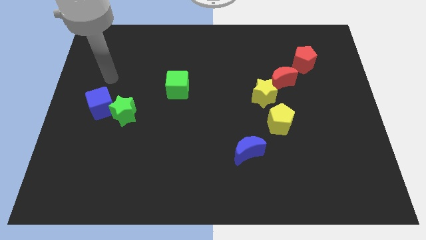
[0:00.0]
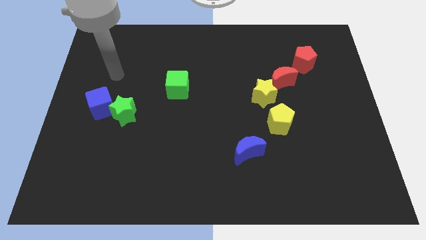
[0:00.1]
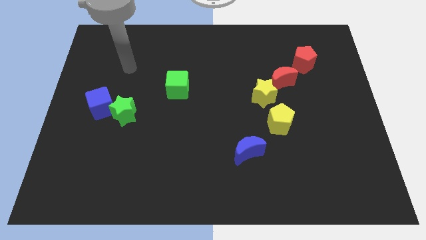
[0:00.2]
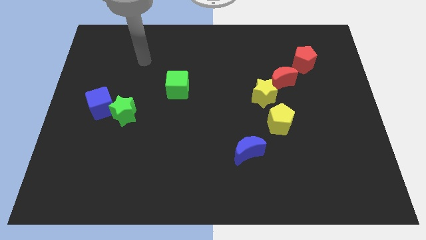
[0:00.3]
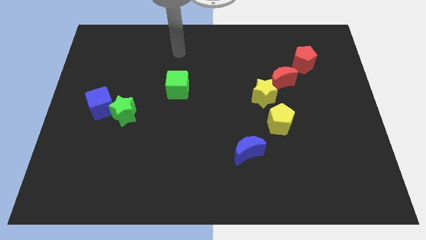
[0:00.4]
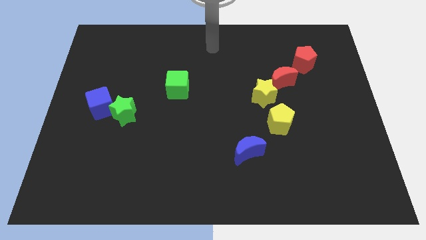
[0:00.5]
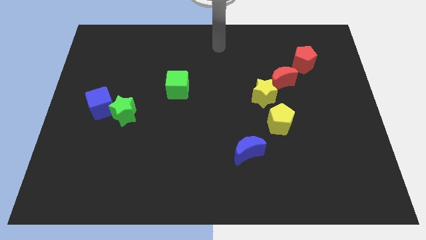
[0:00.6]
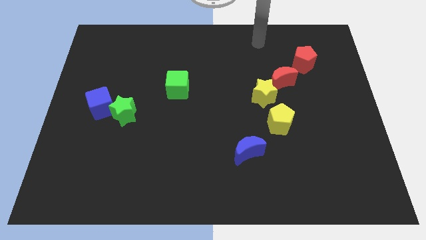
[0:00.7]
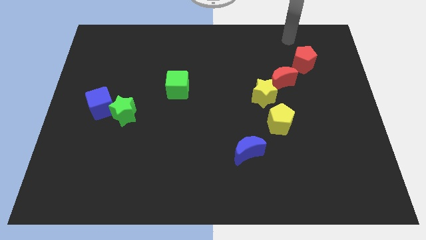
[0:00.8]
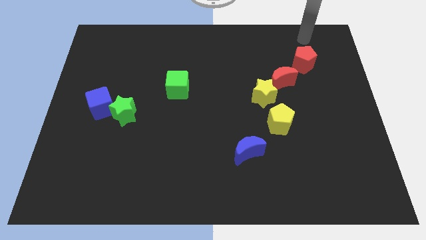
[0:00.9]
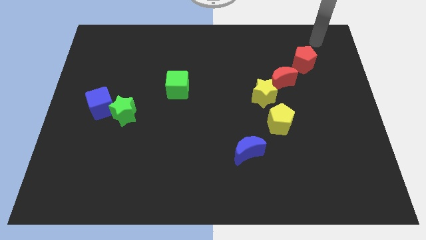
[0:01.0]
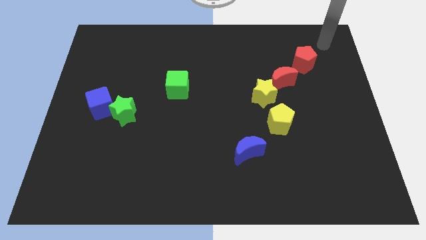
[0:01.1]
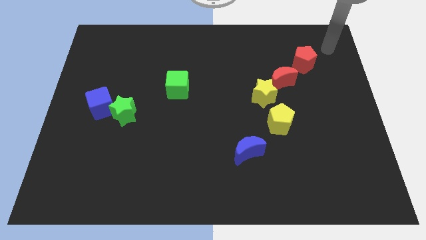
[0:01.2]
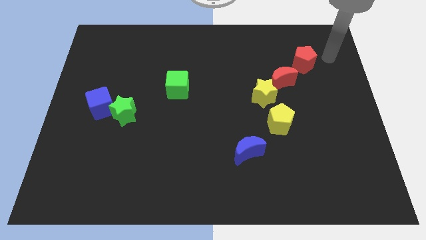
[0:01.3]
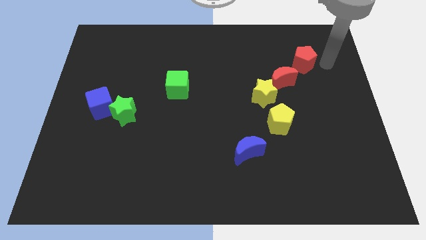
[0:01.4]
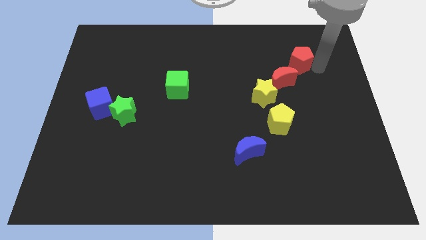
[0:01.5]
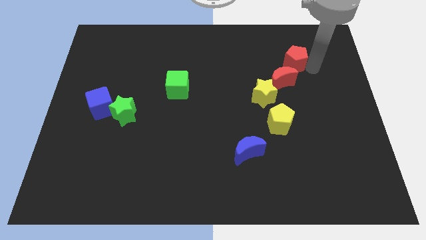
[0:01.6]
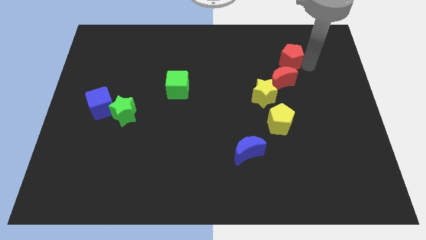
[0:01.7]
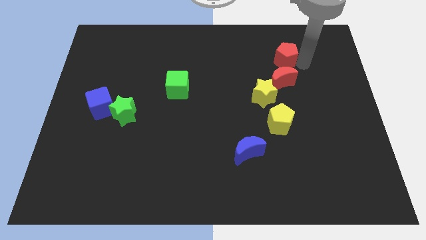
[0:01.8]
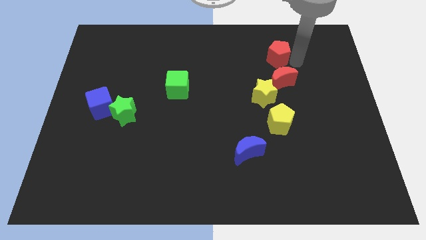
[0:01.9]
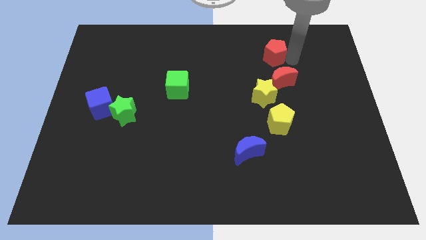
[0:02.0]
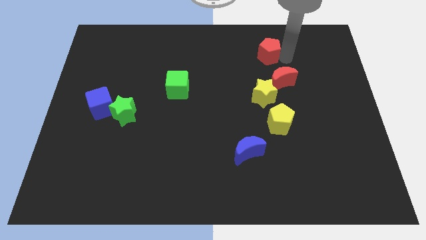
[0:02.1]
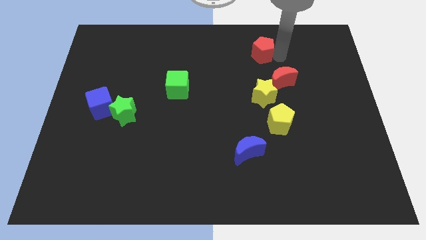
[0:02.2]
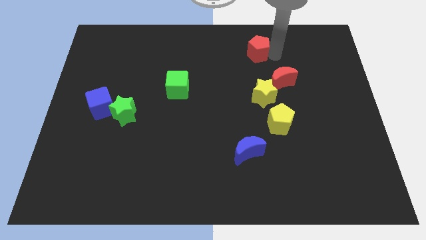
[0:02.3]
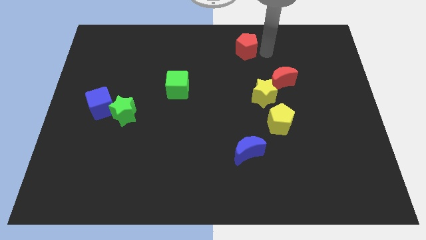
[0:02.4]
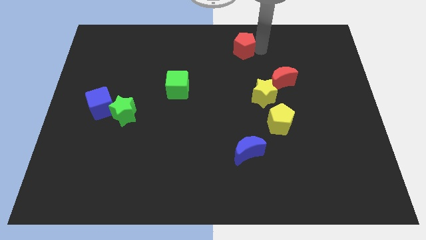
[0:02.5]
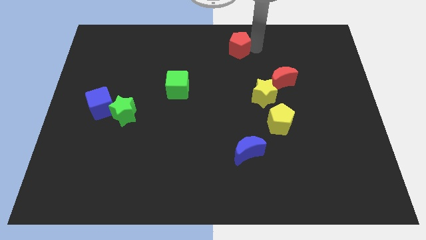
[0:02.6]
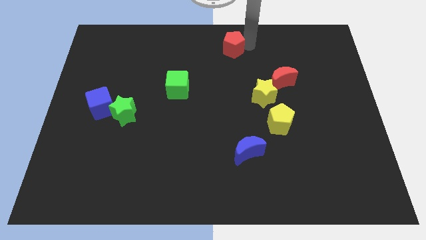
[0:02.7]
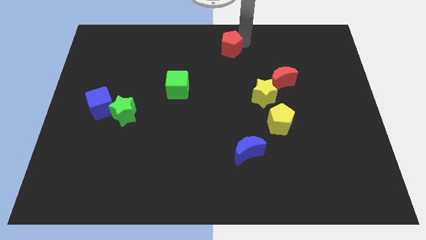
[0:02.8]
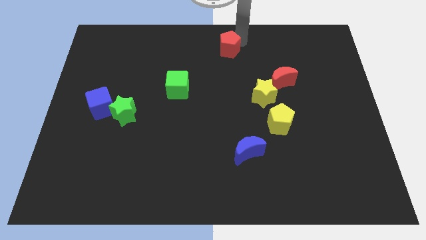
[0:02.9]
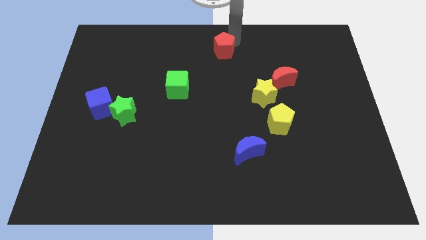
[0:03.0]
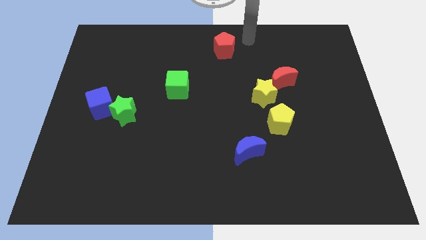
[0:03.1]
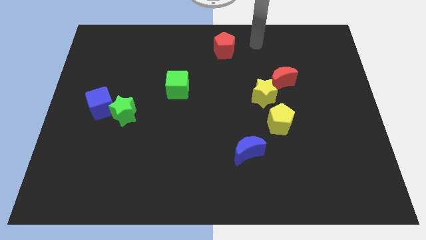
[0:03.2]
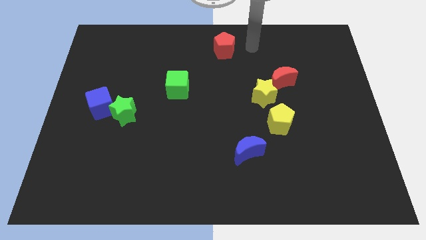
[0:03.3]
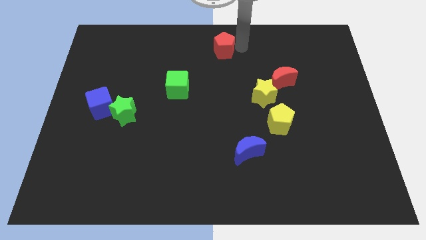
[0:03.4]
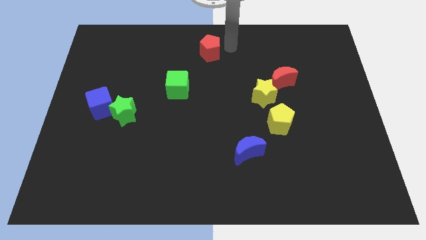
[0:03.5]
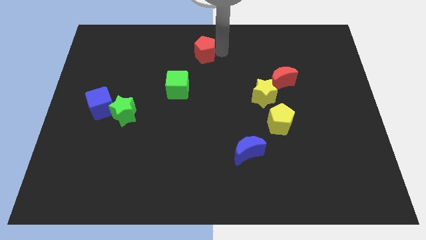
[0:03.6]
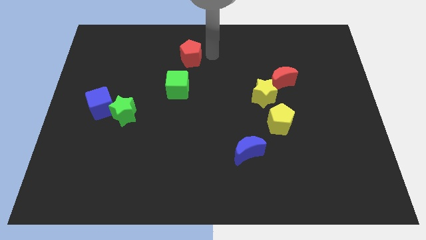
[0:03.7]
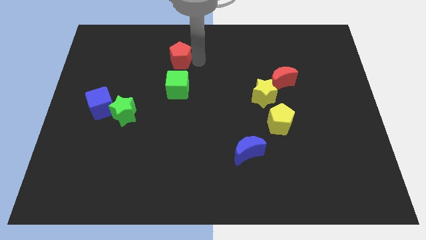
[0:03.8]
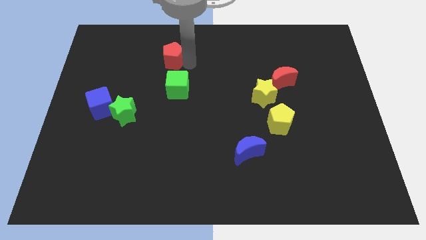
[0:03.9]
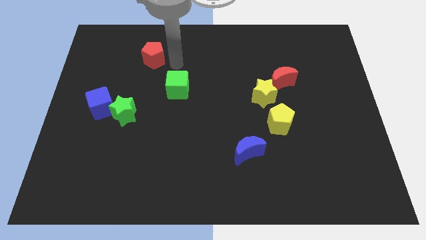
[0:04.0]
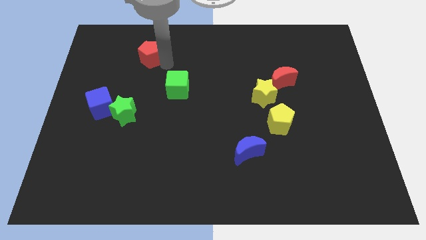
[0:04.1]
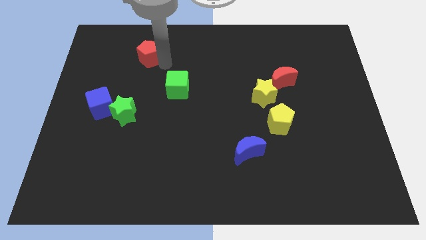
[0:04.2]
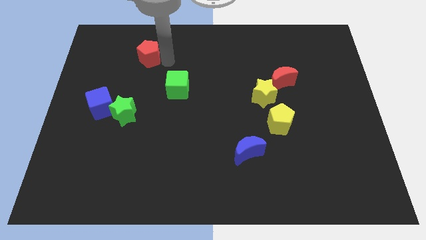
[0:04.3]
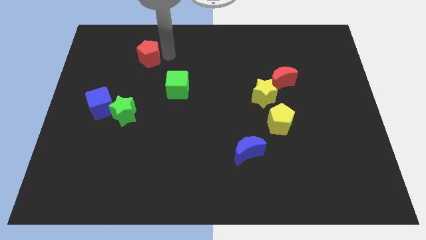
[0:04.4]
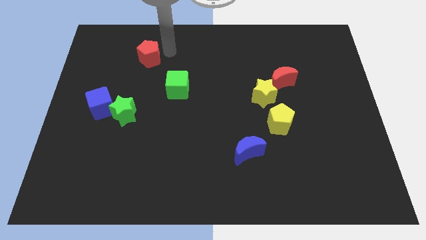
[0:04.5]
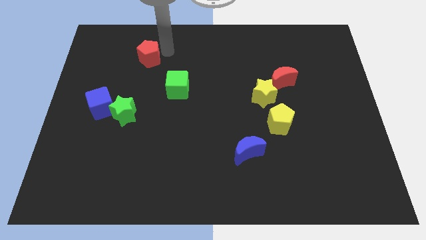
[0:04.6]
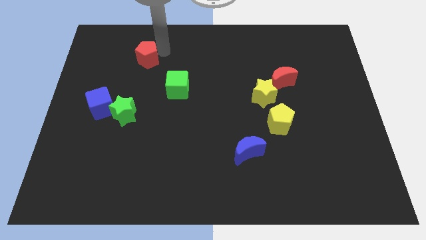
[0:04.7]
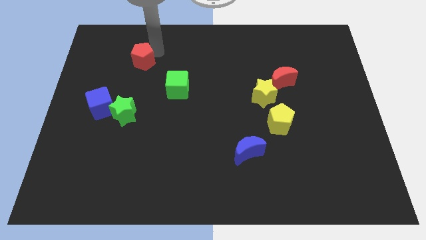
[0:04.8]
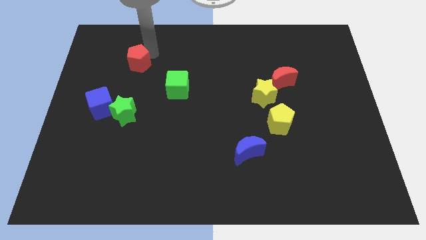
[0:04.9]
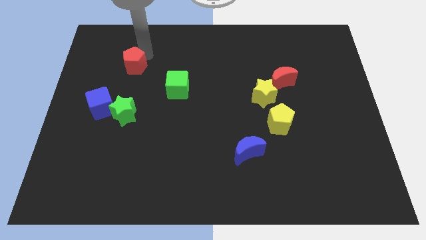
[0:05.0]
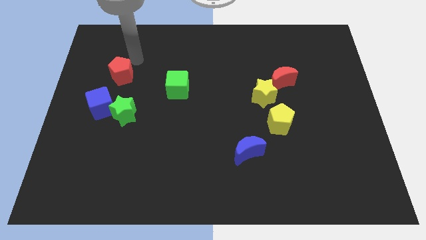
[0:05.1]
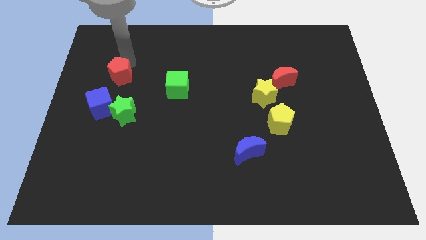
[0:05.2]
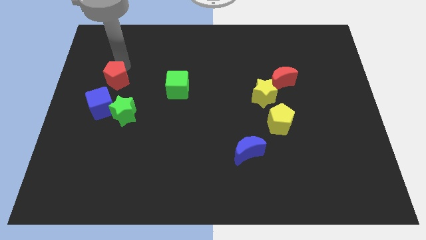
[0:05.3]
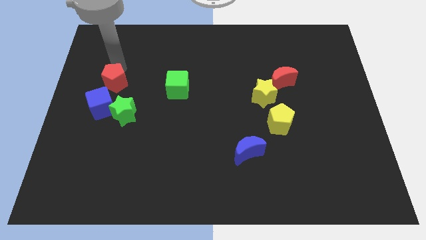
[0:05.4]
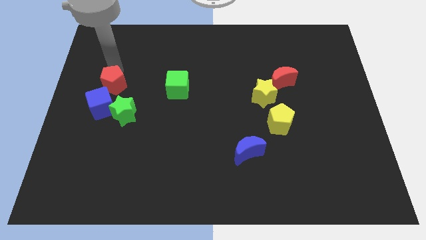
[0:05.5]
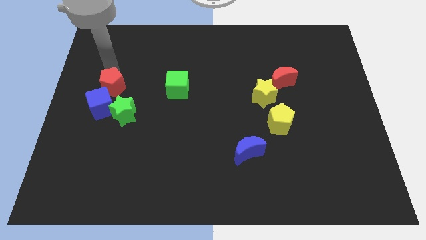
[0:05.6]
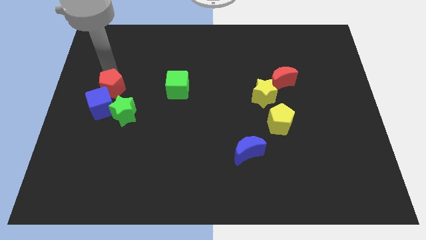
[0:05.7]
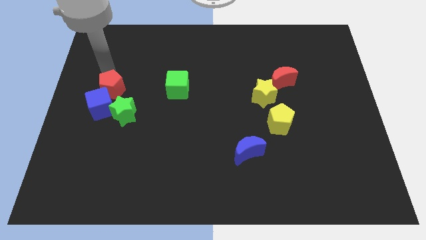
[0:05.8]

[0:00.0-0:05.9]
push the red pentagon next to the blue cube

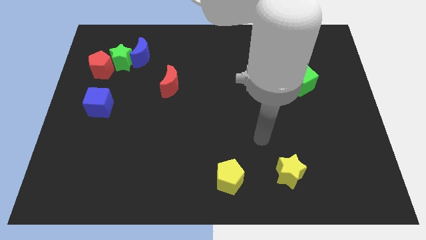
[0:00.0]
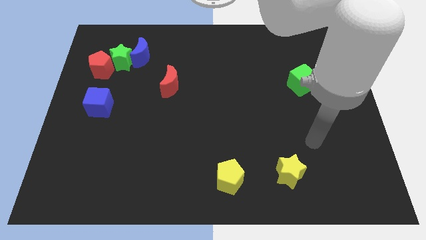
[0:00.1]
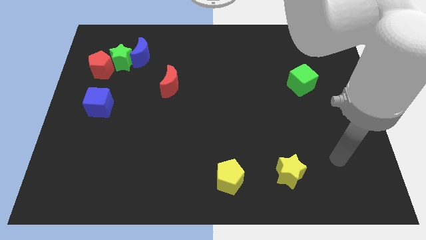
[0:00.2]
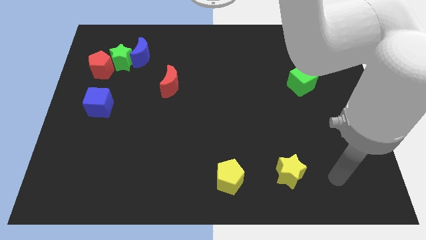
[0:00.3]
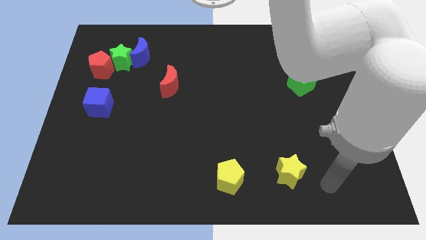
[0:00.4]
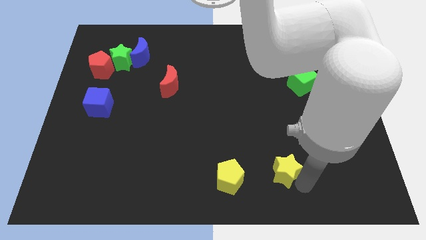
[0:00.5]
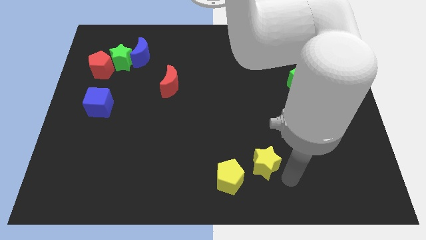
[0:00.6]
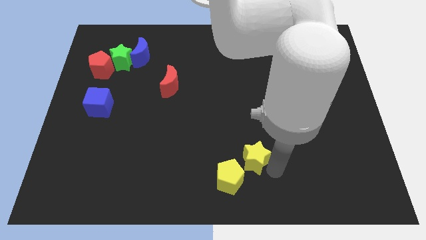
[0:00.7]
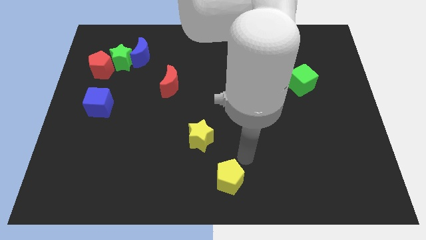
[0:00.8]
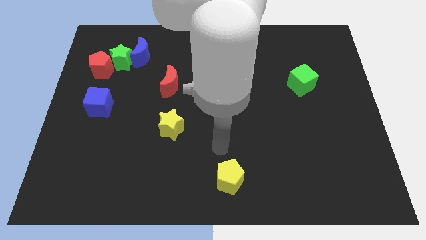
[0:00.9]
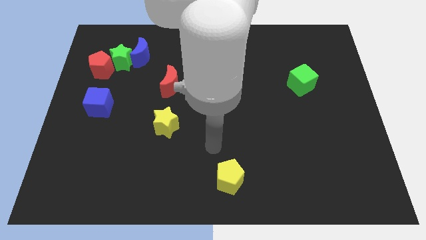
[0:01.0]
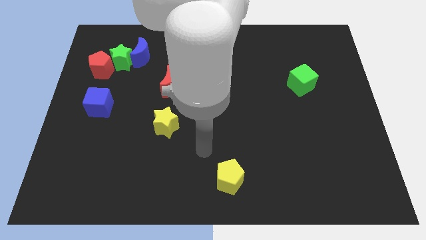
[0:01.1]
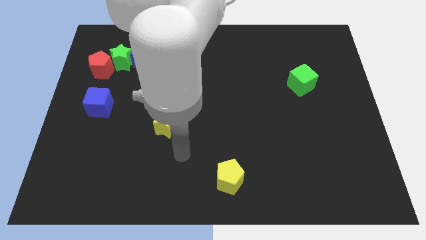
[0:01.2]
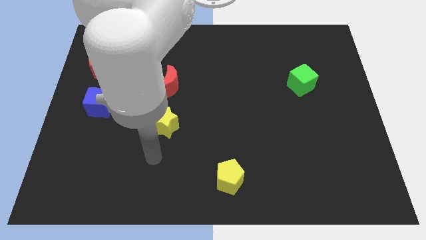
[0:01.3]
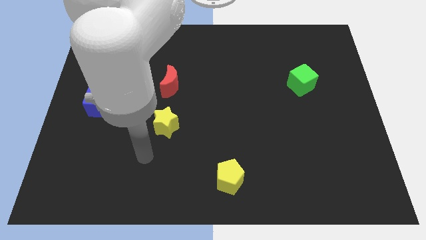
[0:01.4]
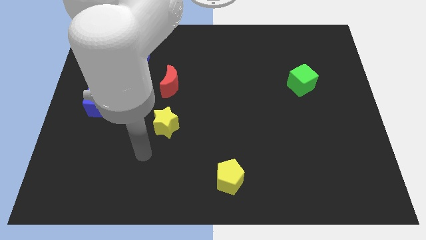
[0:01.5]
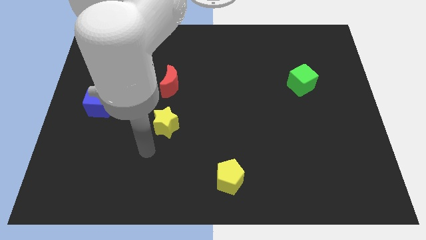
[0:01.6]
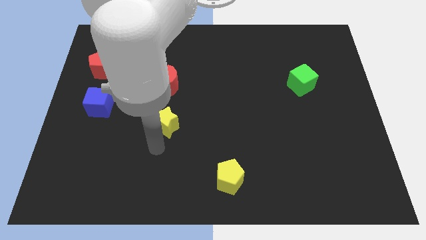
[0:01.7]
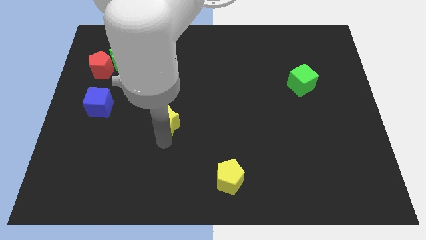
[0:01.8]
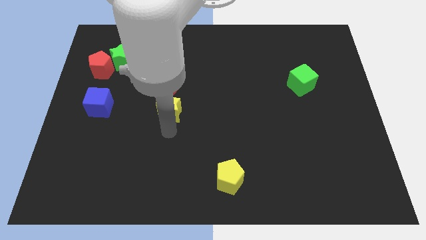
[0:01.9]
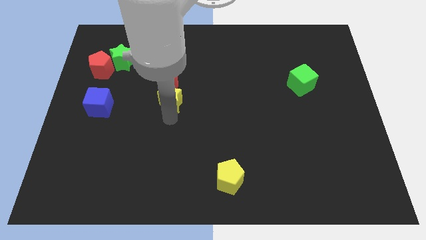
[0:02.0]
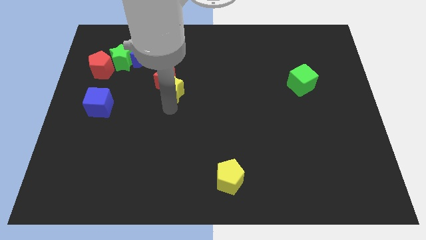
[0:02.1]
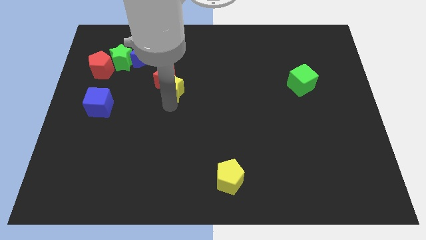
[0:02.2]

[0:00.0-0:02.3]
move the yellow star to the red moon

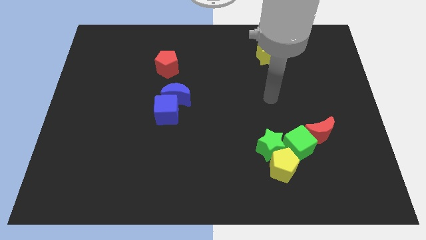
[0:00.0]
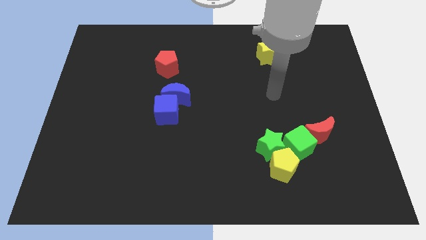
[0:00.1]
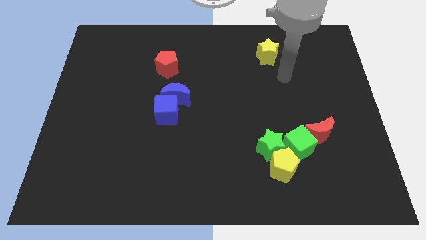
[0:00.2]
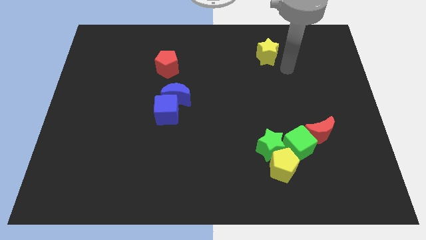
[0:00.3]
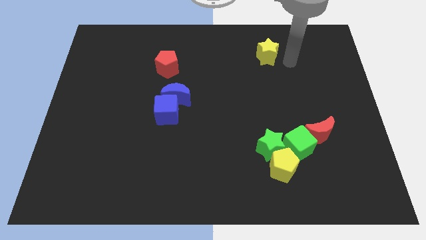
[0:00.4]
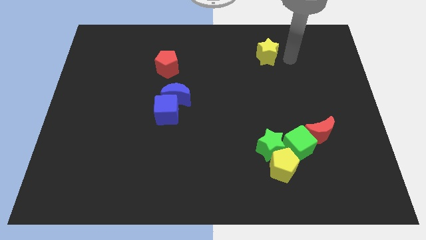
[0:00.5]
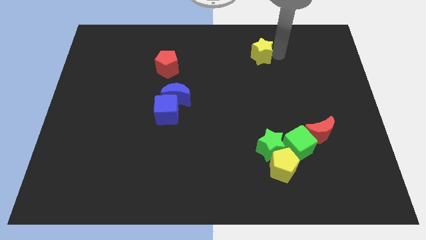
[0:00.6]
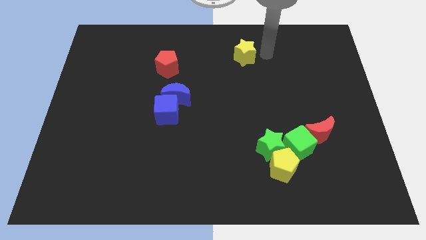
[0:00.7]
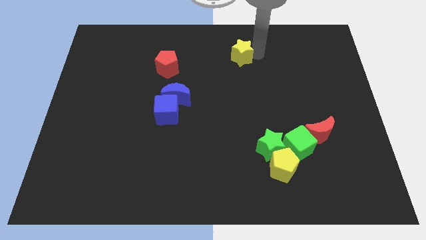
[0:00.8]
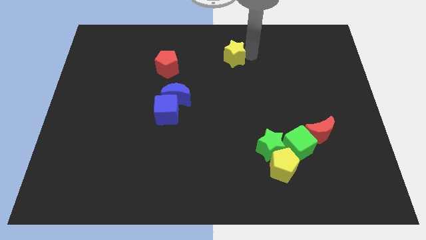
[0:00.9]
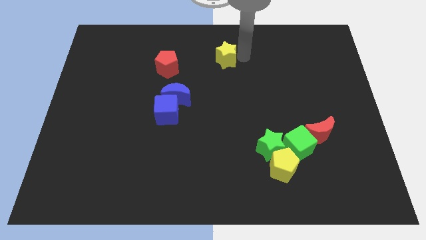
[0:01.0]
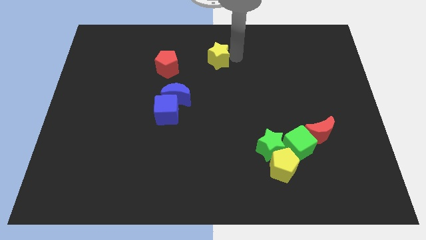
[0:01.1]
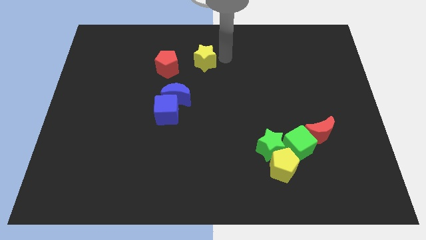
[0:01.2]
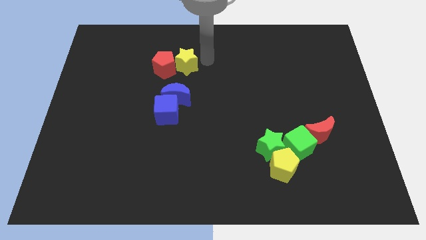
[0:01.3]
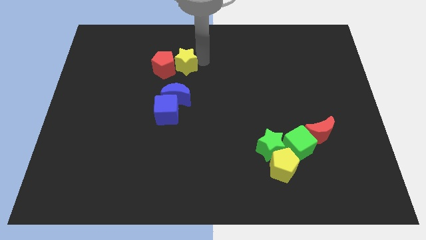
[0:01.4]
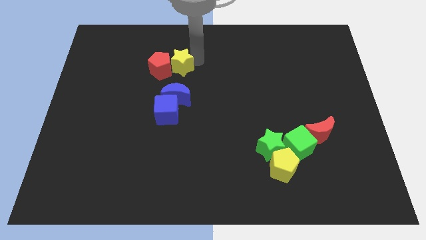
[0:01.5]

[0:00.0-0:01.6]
slide the yellow star next to the red pentagon
